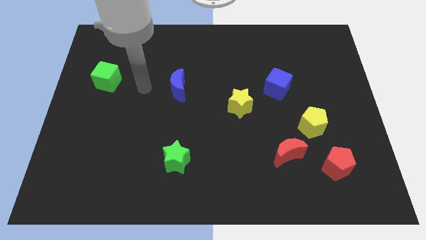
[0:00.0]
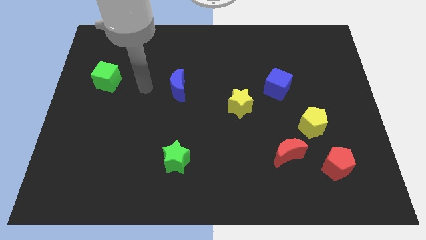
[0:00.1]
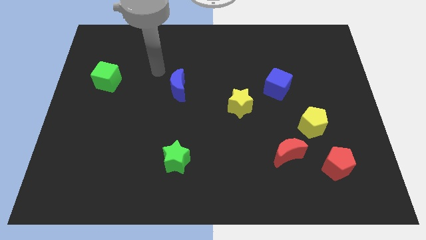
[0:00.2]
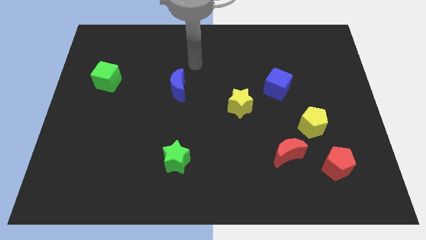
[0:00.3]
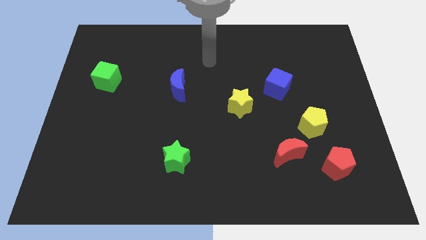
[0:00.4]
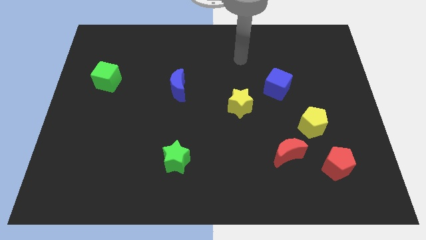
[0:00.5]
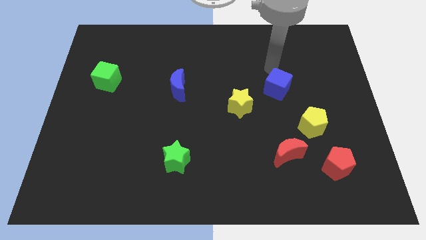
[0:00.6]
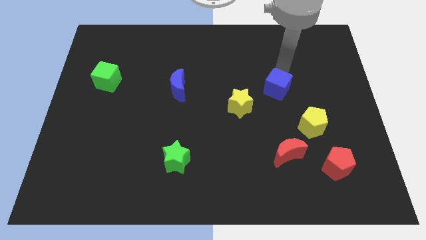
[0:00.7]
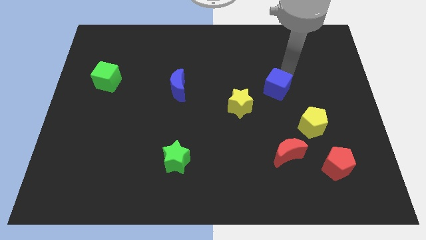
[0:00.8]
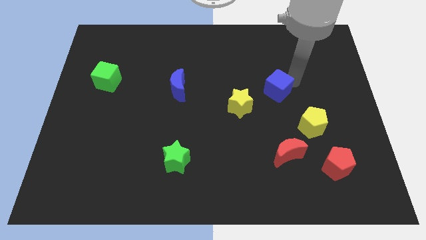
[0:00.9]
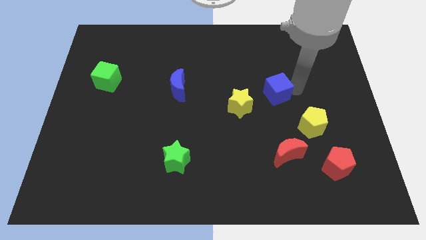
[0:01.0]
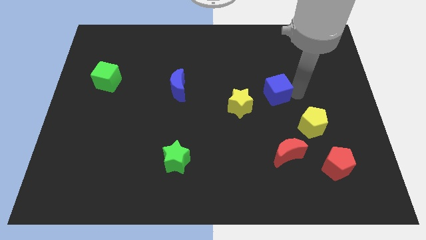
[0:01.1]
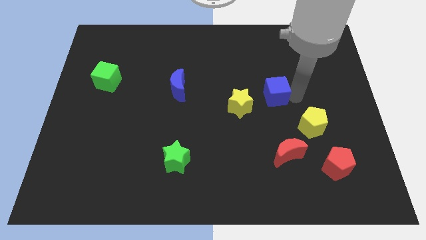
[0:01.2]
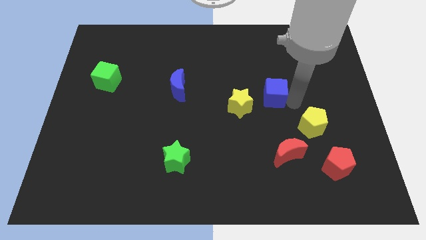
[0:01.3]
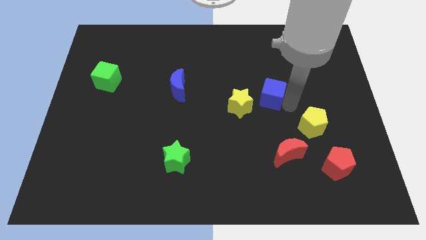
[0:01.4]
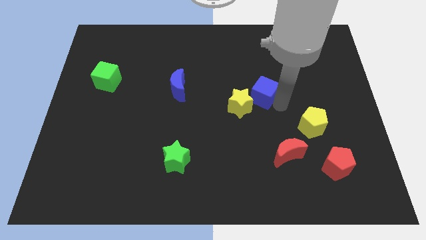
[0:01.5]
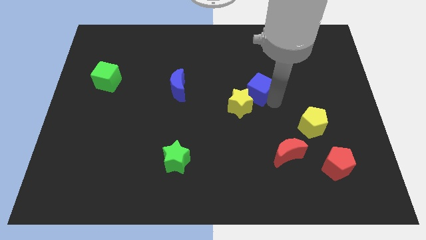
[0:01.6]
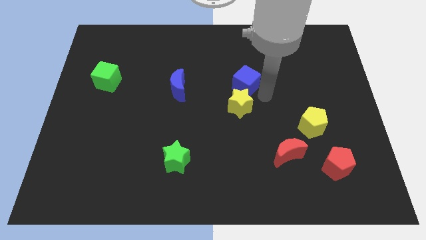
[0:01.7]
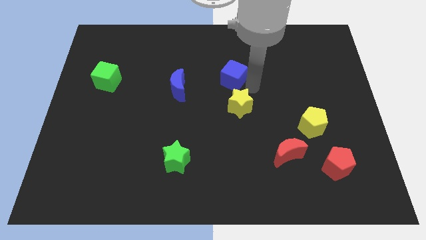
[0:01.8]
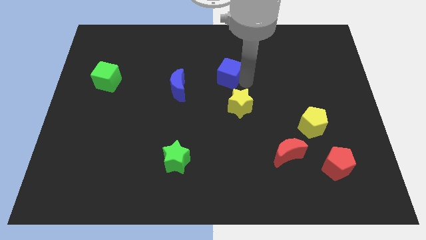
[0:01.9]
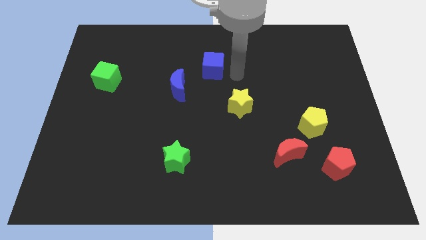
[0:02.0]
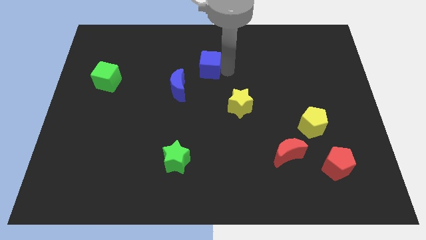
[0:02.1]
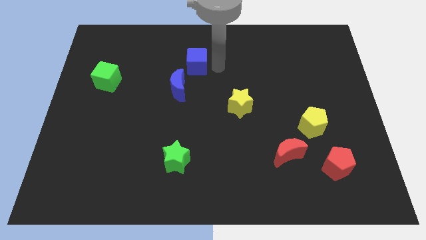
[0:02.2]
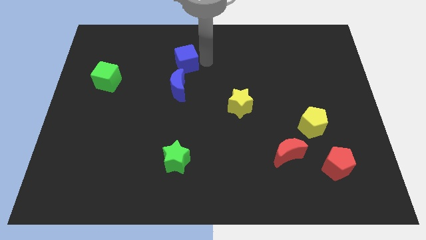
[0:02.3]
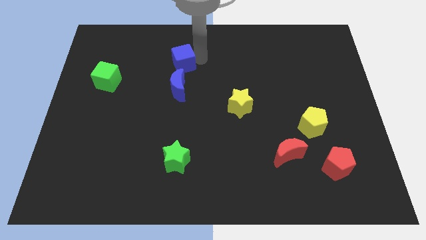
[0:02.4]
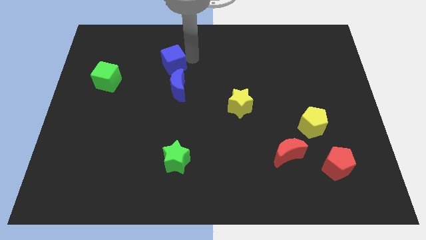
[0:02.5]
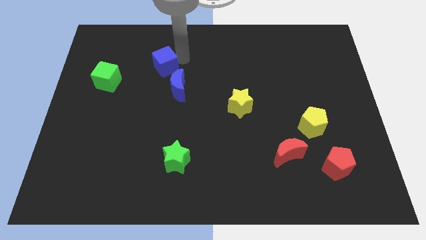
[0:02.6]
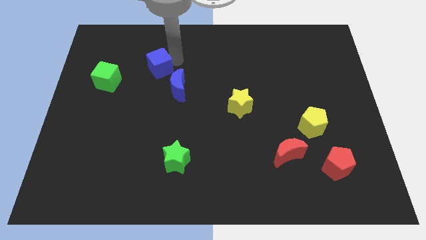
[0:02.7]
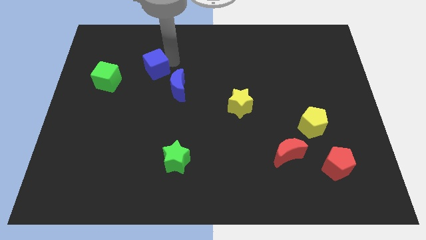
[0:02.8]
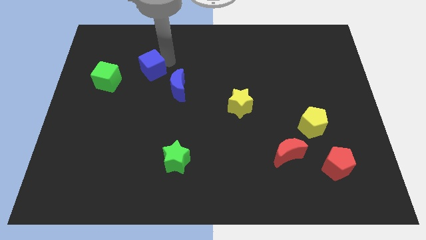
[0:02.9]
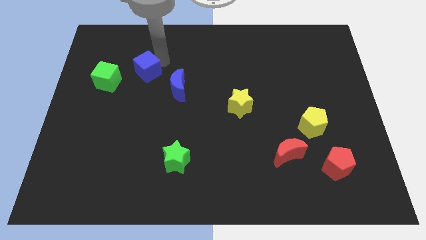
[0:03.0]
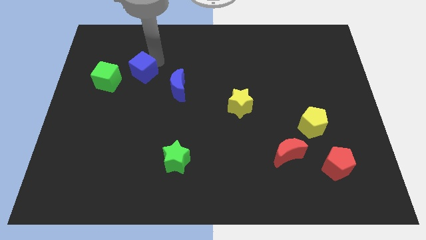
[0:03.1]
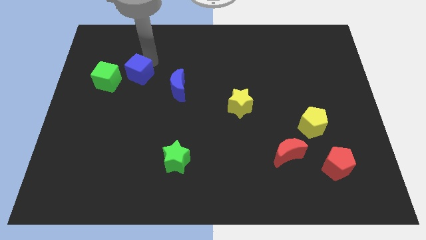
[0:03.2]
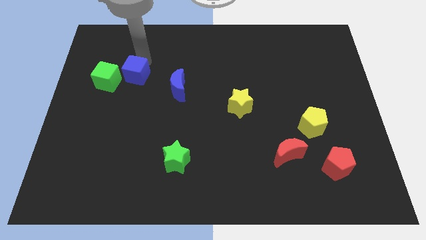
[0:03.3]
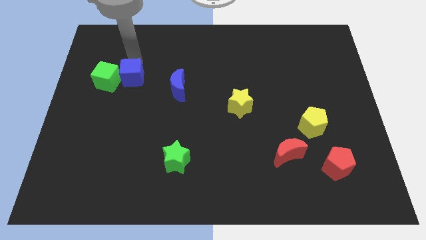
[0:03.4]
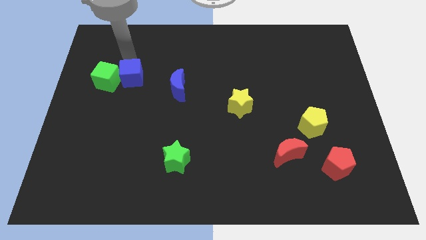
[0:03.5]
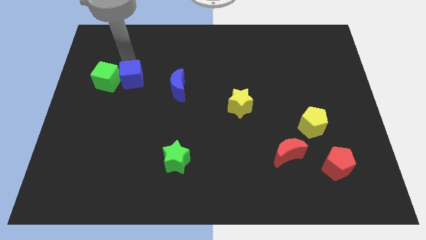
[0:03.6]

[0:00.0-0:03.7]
slide the blue cube to the green cube

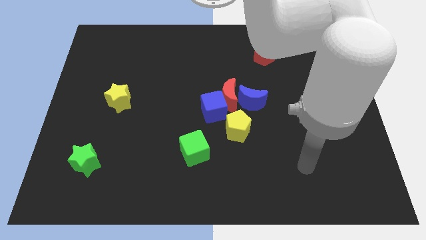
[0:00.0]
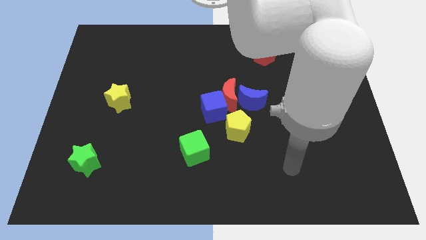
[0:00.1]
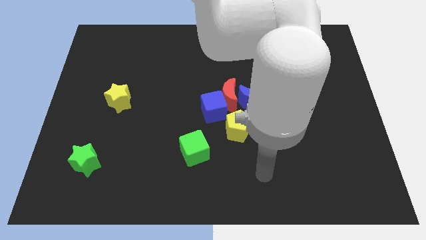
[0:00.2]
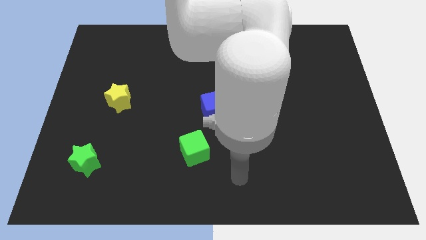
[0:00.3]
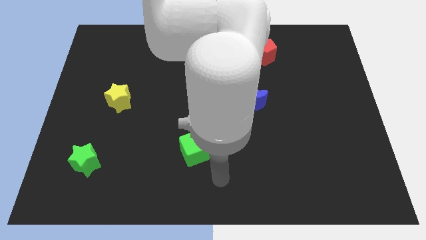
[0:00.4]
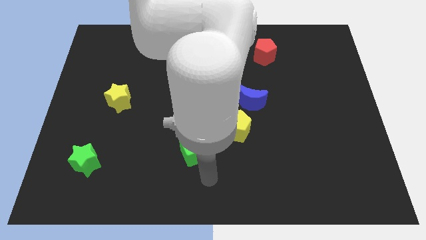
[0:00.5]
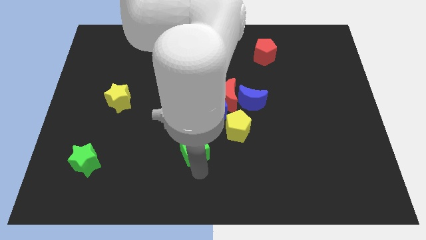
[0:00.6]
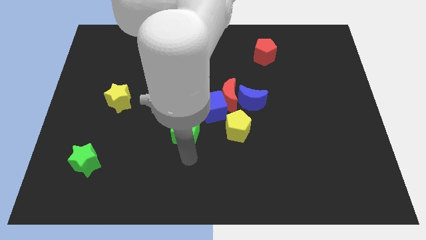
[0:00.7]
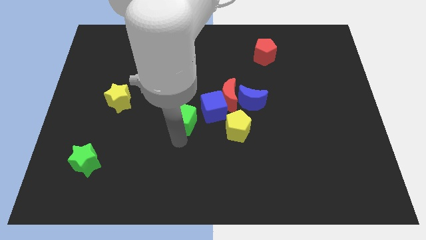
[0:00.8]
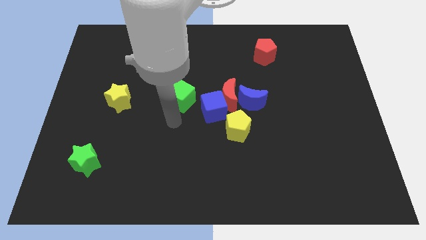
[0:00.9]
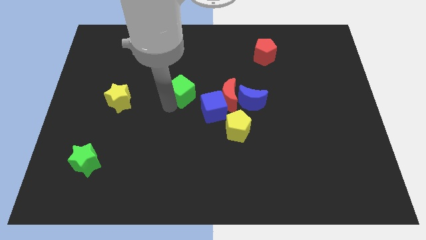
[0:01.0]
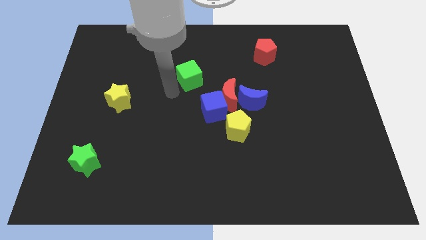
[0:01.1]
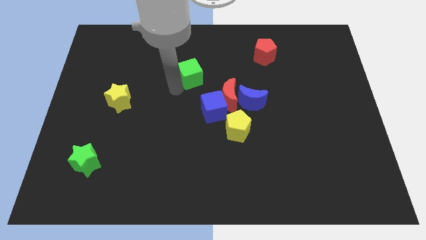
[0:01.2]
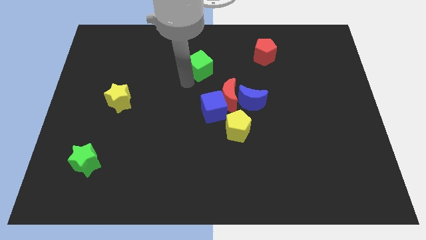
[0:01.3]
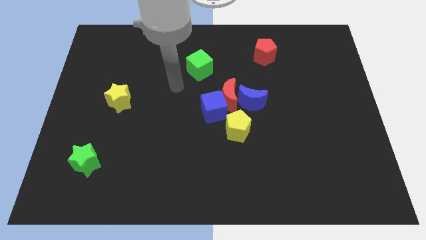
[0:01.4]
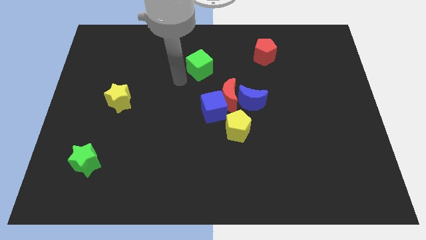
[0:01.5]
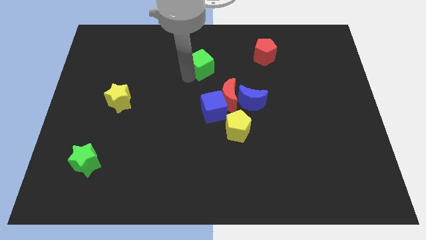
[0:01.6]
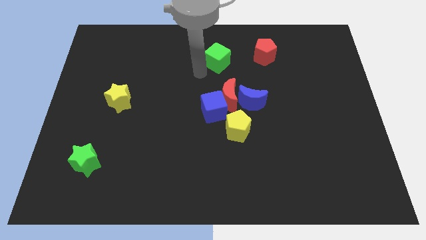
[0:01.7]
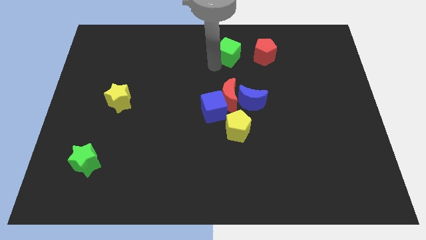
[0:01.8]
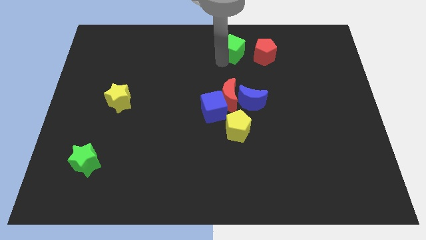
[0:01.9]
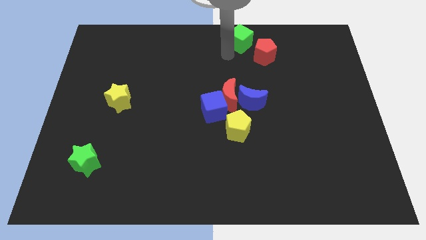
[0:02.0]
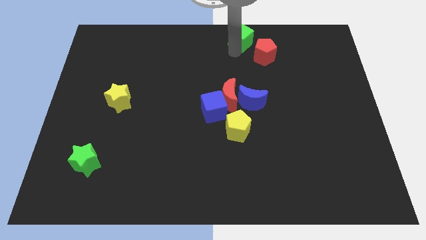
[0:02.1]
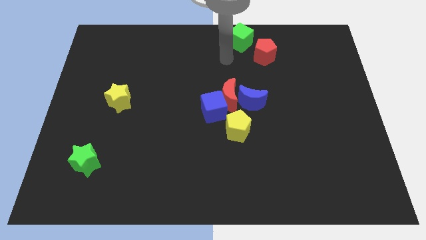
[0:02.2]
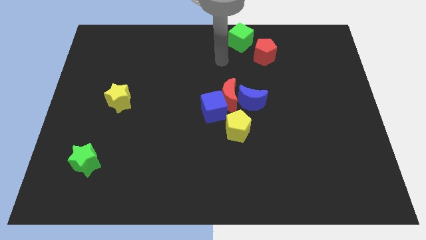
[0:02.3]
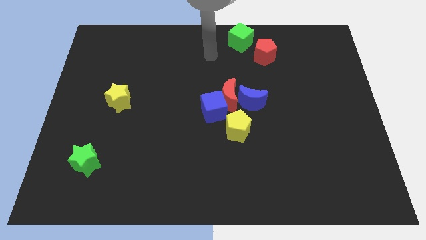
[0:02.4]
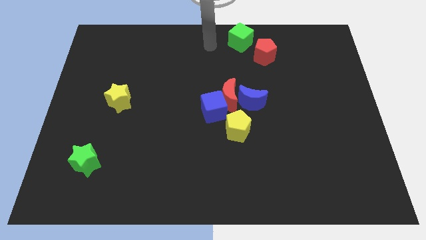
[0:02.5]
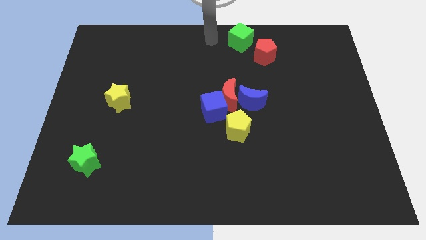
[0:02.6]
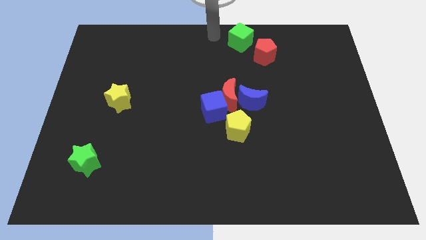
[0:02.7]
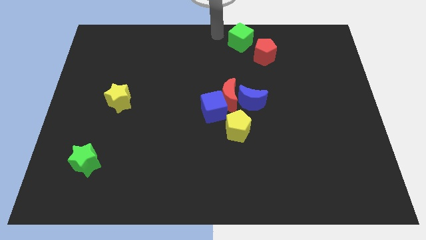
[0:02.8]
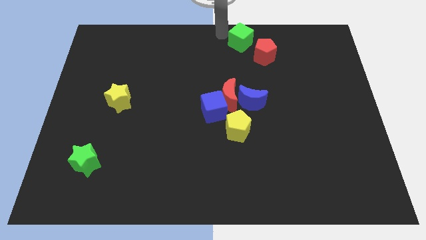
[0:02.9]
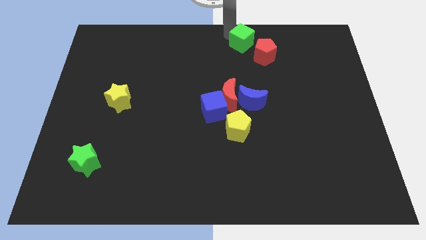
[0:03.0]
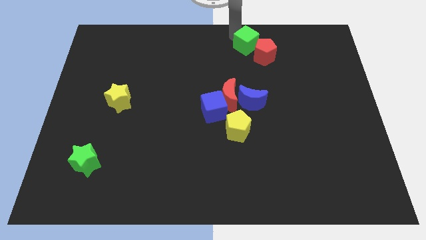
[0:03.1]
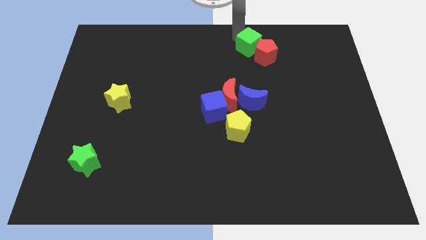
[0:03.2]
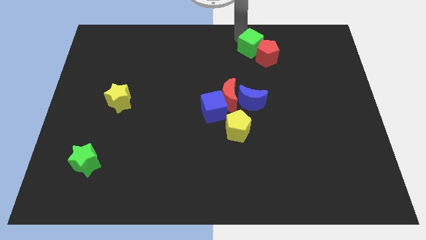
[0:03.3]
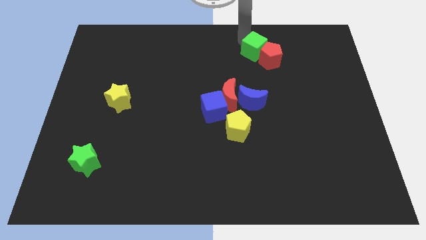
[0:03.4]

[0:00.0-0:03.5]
move the green cube to the red pentagon

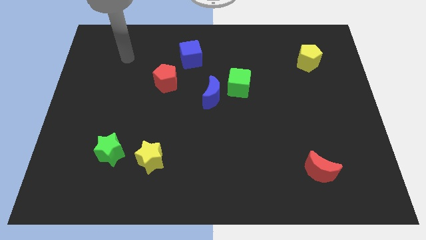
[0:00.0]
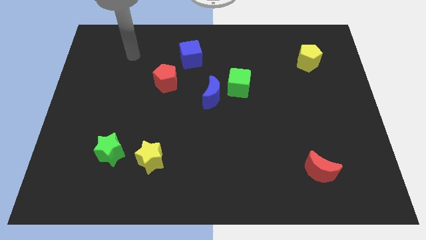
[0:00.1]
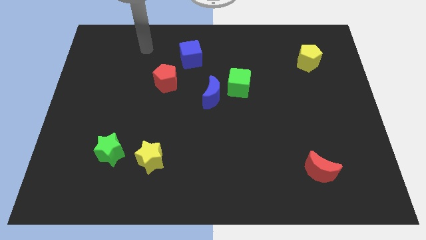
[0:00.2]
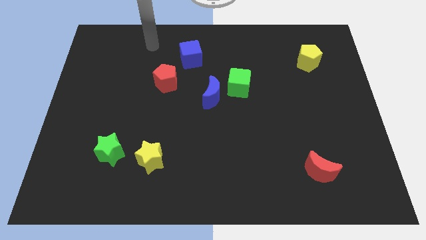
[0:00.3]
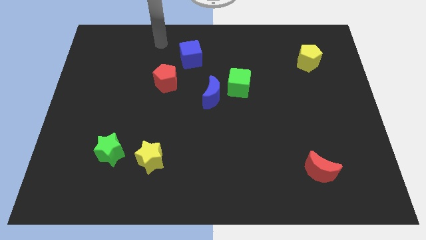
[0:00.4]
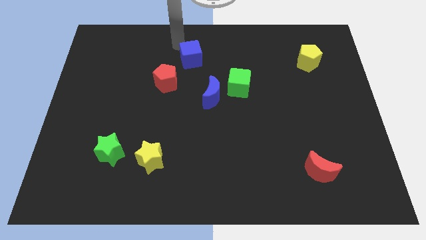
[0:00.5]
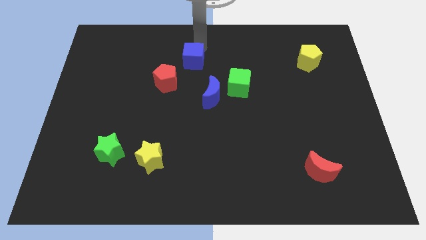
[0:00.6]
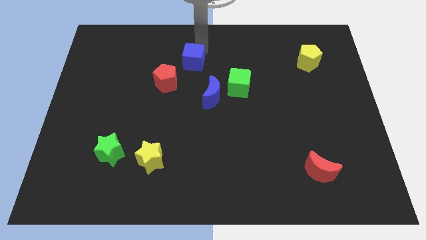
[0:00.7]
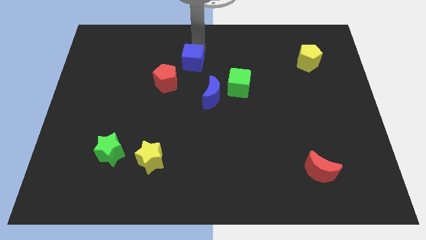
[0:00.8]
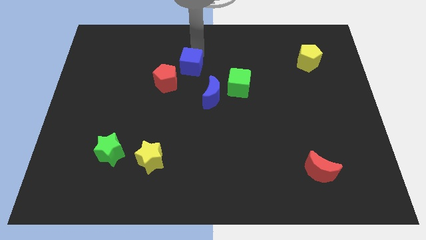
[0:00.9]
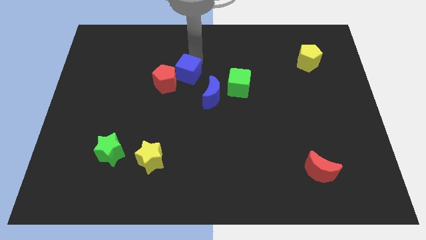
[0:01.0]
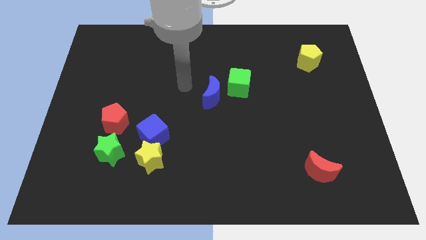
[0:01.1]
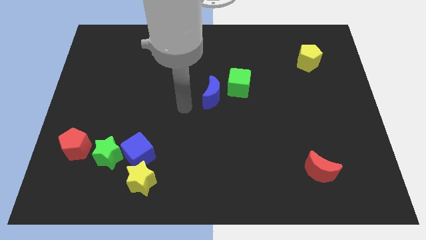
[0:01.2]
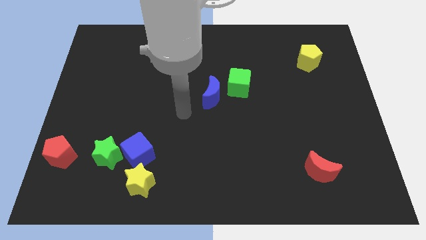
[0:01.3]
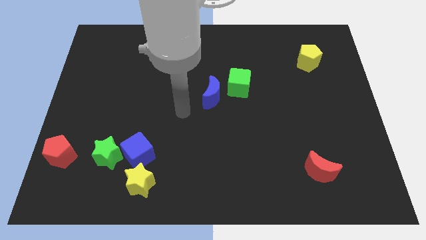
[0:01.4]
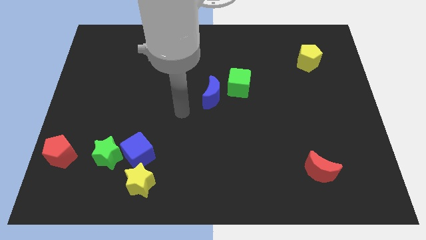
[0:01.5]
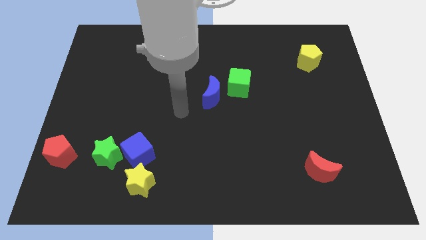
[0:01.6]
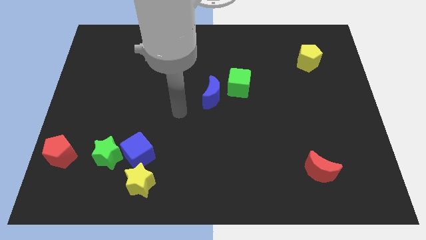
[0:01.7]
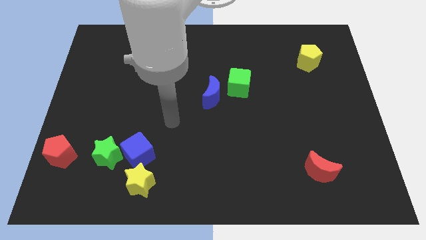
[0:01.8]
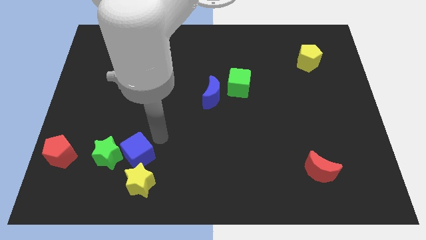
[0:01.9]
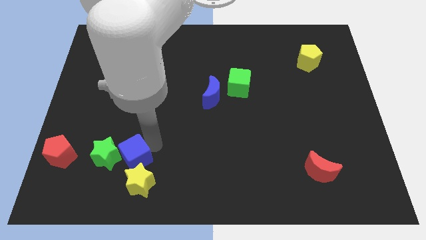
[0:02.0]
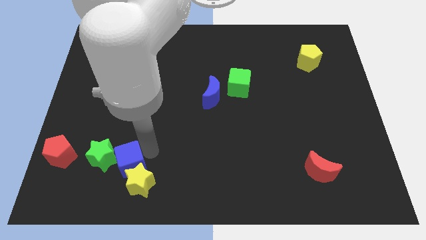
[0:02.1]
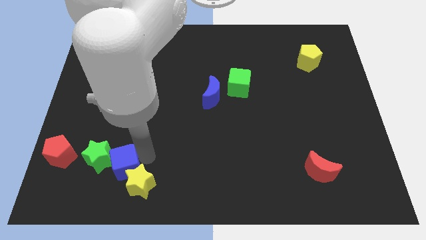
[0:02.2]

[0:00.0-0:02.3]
put the blue cube to the yellow star
